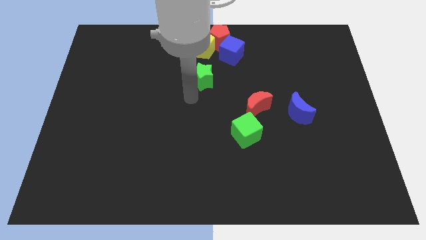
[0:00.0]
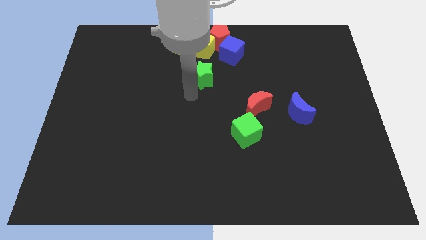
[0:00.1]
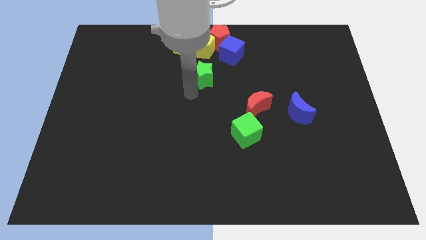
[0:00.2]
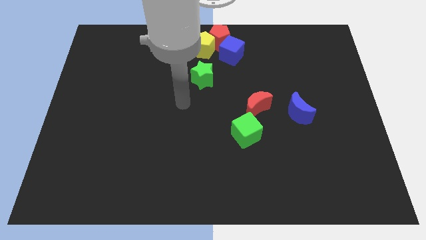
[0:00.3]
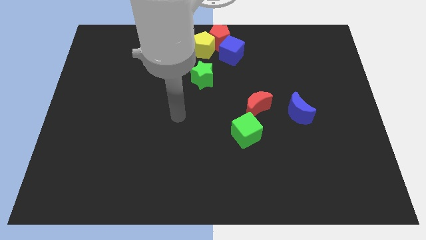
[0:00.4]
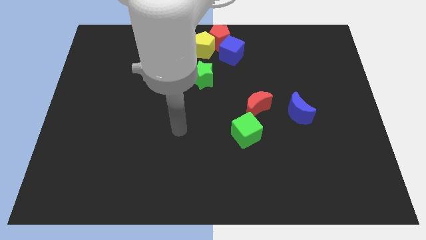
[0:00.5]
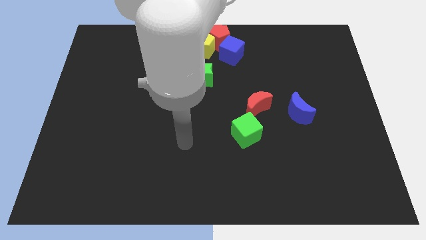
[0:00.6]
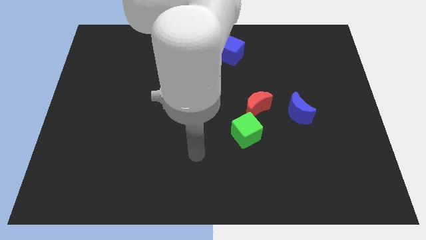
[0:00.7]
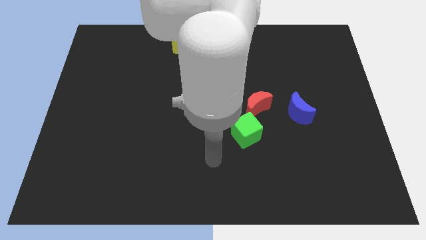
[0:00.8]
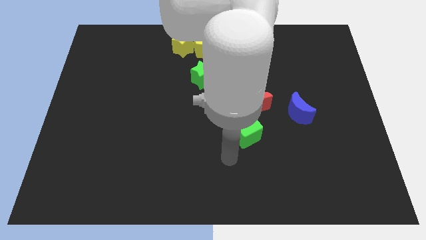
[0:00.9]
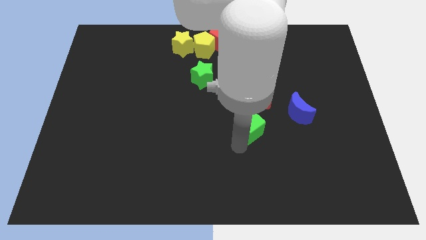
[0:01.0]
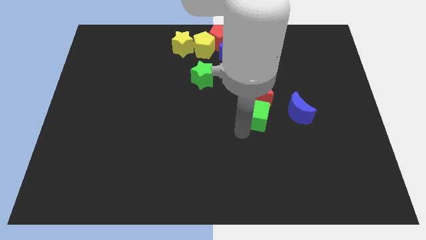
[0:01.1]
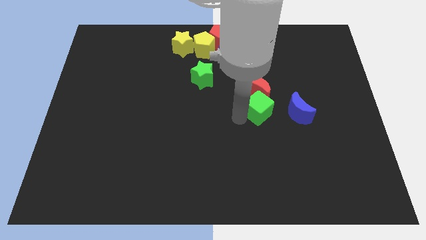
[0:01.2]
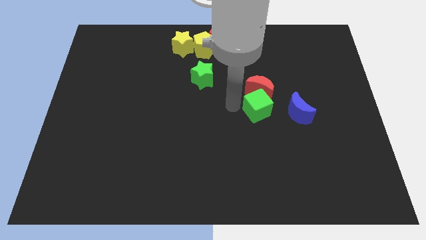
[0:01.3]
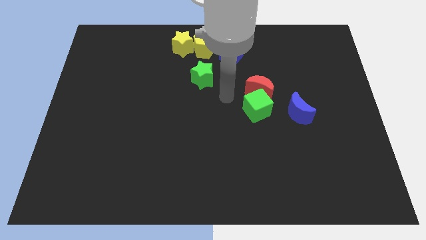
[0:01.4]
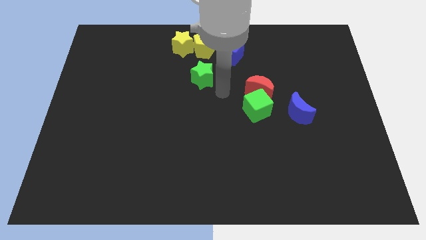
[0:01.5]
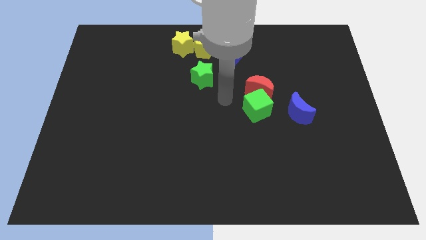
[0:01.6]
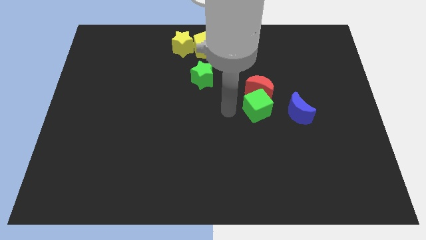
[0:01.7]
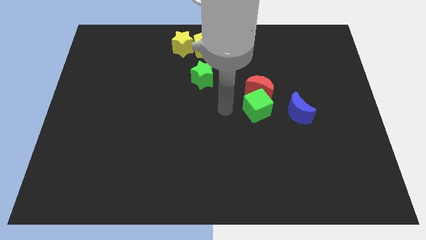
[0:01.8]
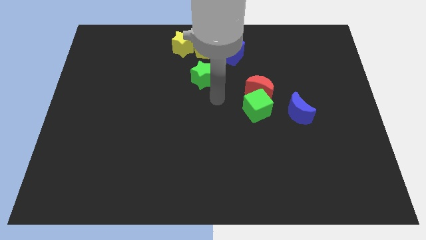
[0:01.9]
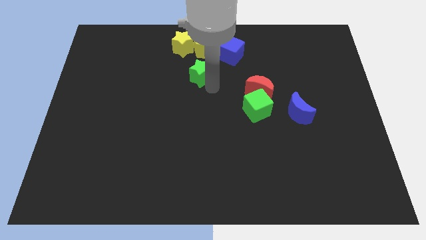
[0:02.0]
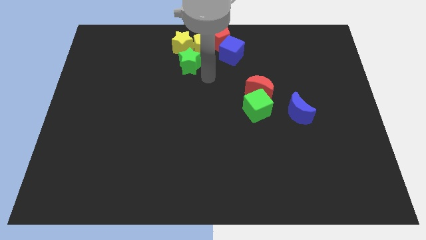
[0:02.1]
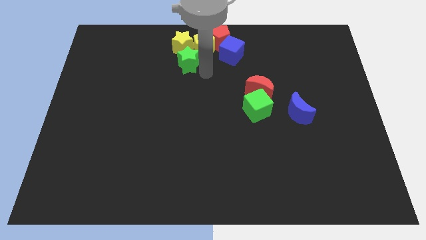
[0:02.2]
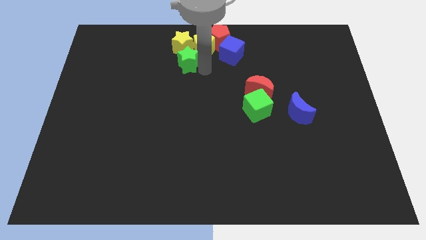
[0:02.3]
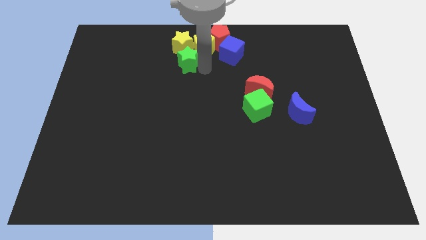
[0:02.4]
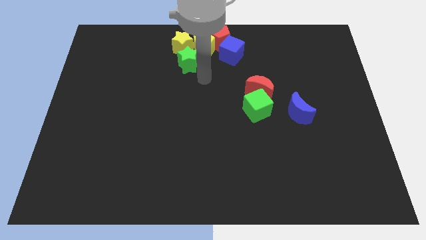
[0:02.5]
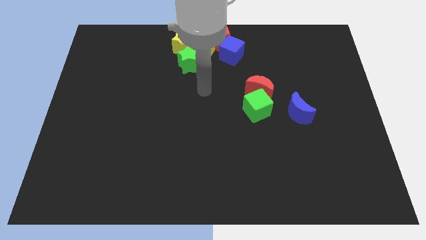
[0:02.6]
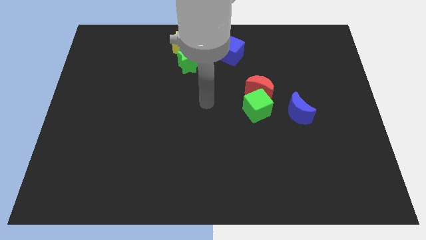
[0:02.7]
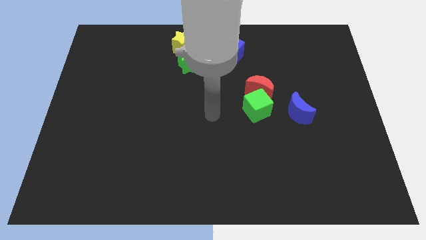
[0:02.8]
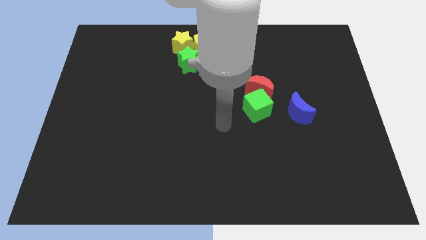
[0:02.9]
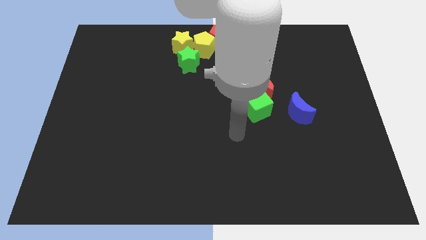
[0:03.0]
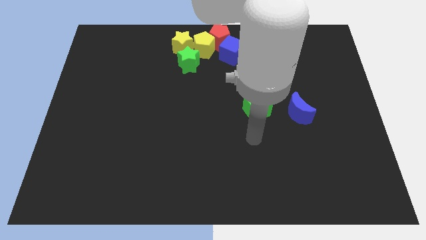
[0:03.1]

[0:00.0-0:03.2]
move both the green blocks towards the top side of the board

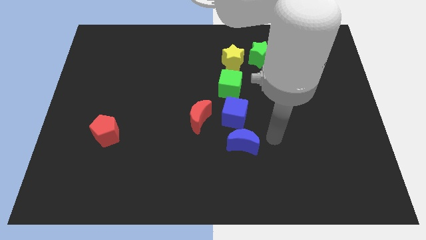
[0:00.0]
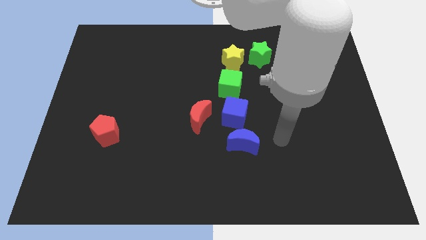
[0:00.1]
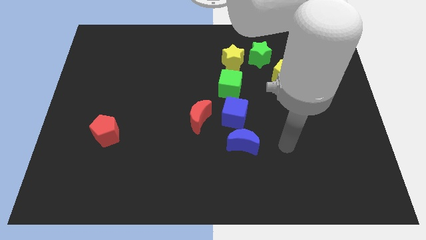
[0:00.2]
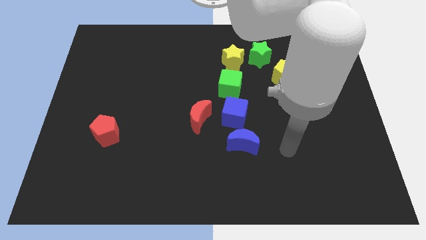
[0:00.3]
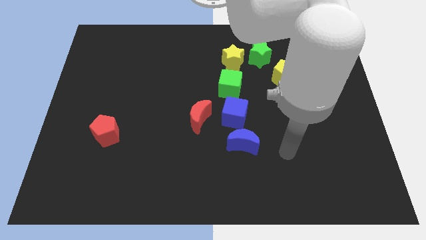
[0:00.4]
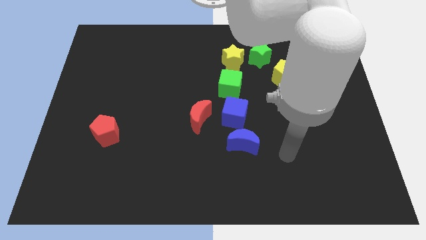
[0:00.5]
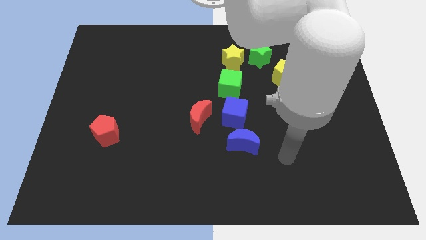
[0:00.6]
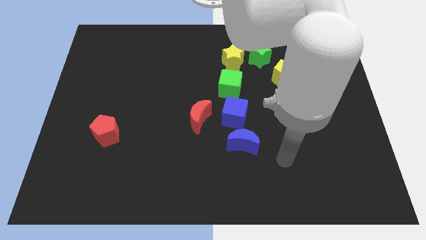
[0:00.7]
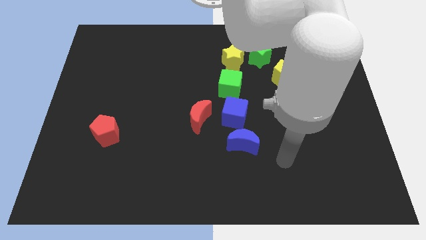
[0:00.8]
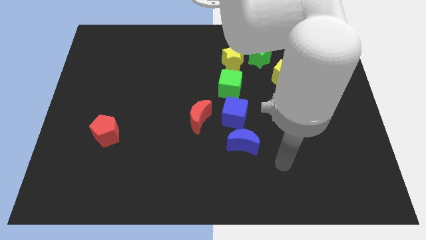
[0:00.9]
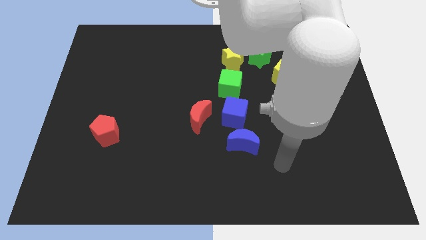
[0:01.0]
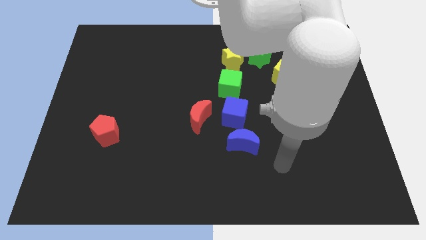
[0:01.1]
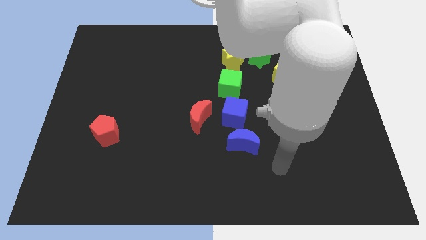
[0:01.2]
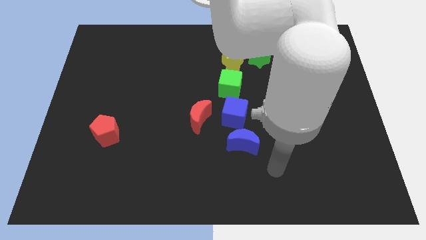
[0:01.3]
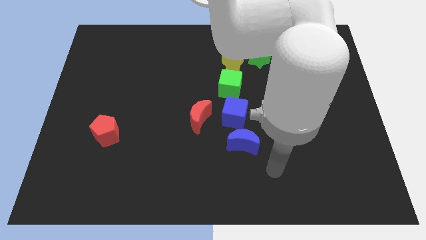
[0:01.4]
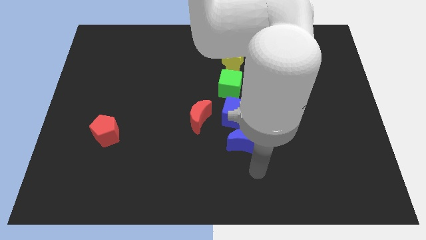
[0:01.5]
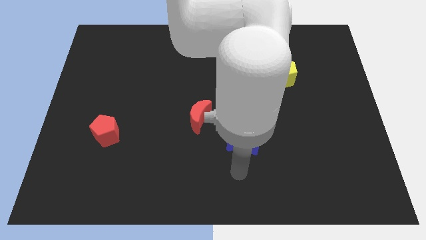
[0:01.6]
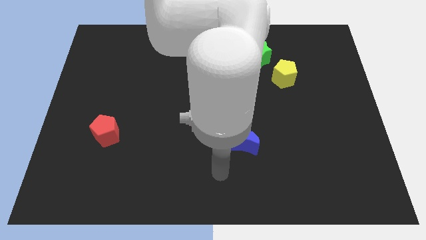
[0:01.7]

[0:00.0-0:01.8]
point your hand below the blue moon

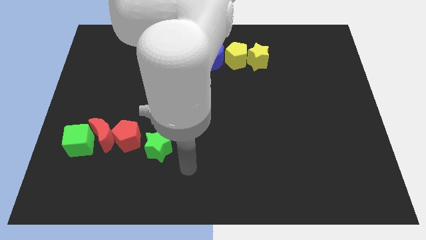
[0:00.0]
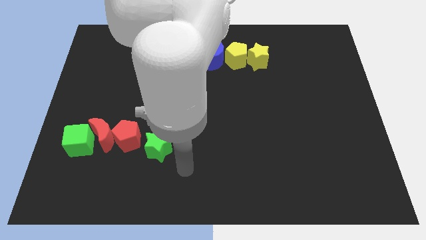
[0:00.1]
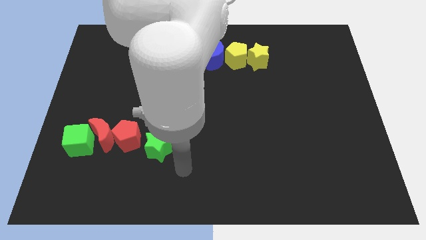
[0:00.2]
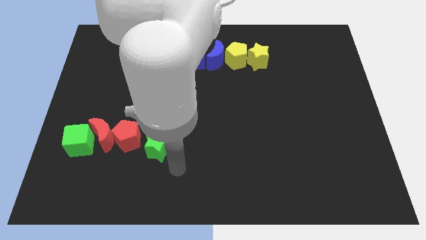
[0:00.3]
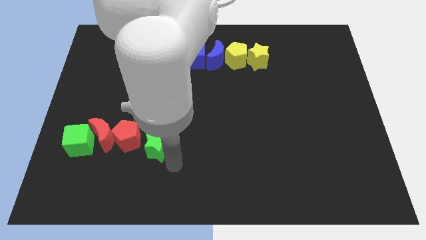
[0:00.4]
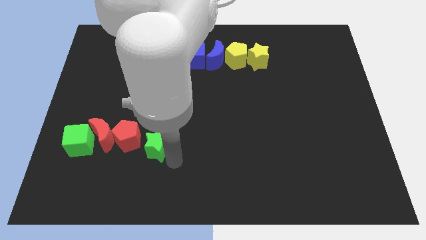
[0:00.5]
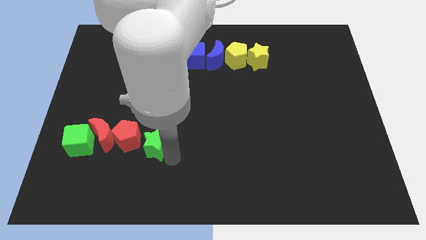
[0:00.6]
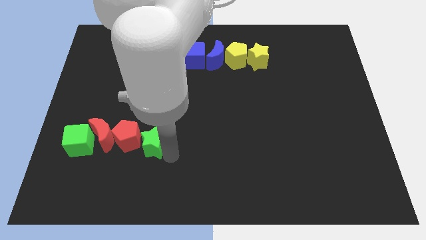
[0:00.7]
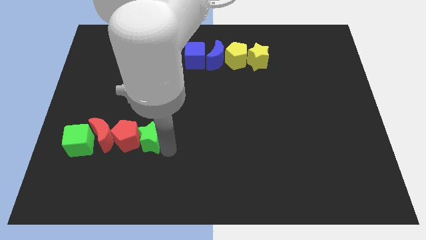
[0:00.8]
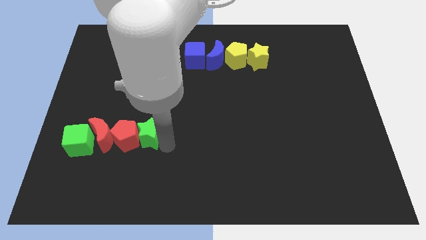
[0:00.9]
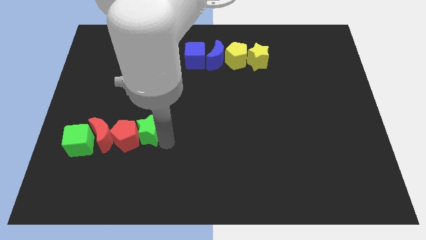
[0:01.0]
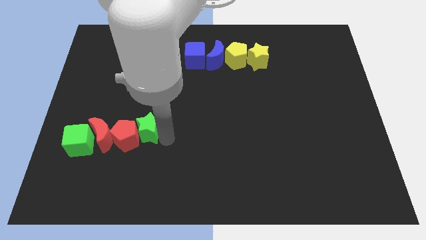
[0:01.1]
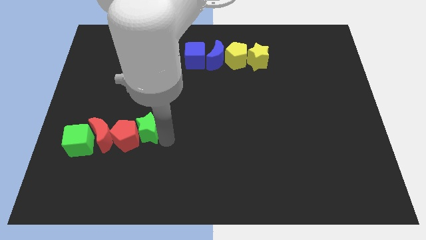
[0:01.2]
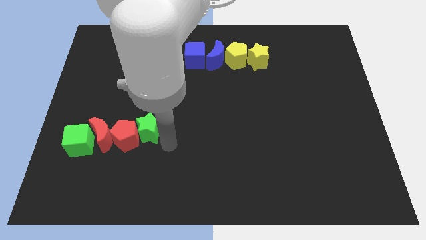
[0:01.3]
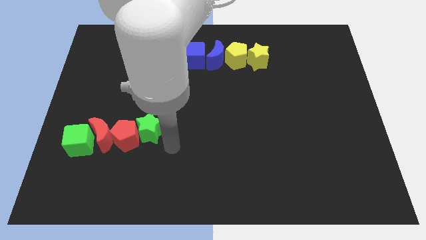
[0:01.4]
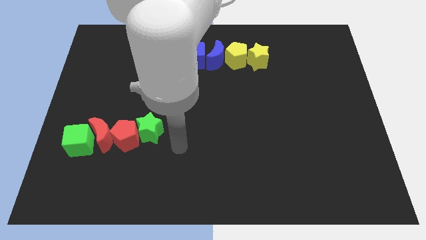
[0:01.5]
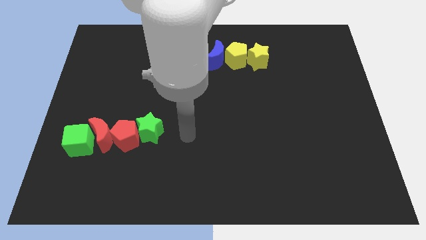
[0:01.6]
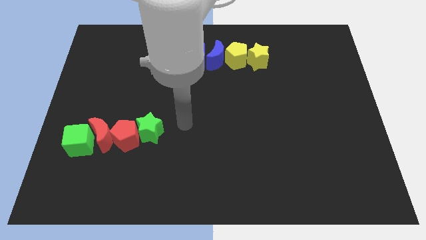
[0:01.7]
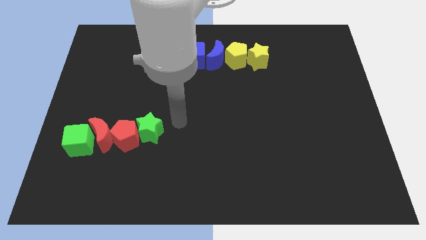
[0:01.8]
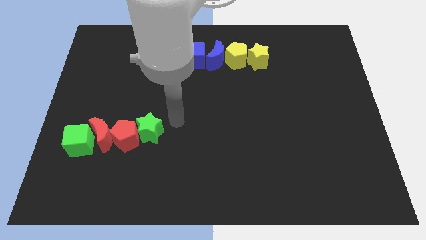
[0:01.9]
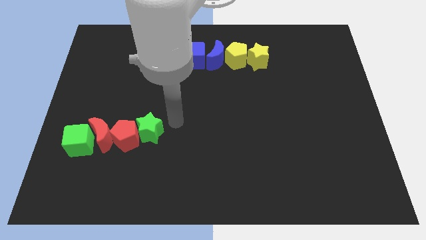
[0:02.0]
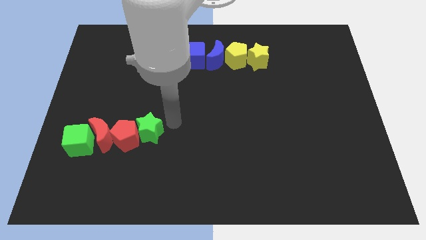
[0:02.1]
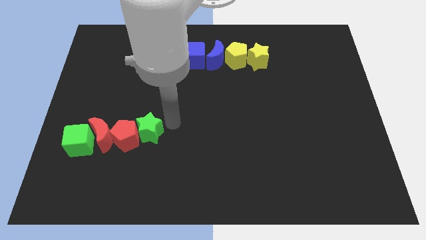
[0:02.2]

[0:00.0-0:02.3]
push the green star into the red pentagon

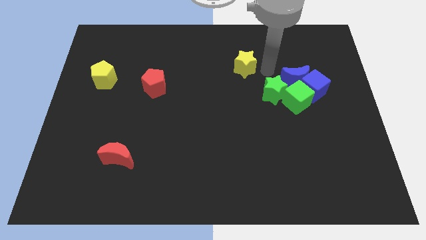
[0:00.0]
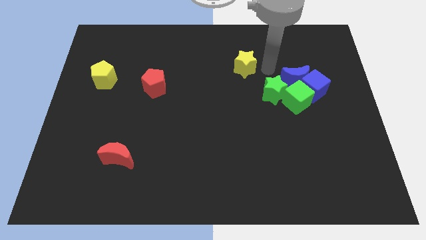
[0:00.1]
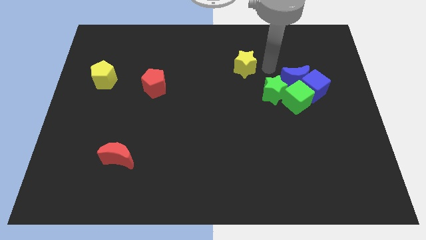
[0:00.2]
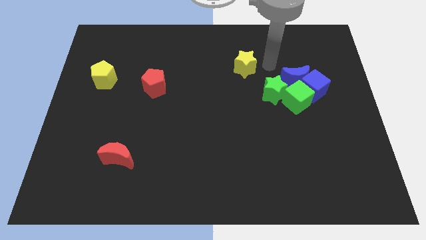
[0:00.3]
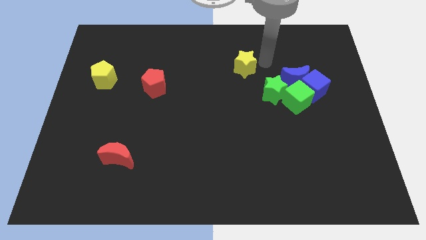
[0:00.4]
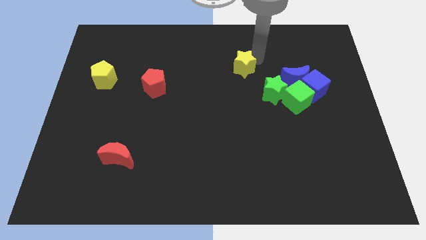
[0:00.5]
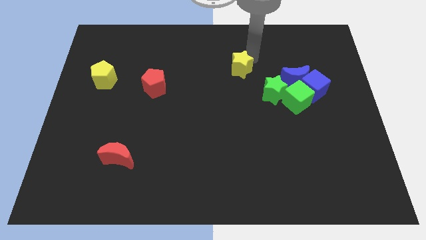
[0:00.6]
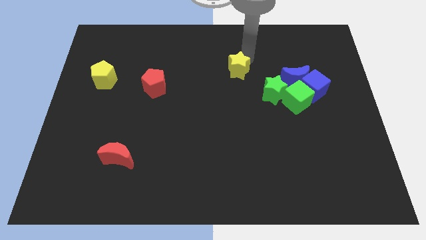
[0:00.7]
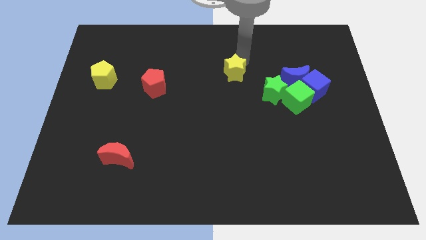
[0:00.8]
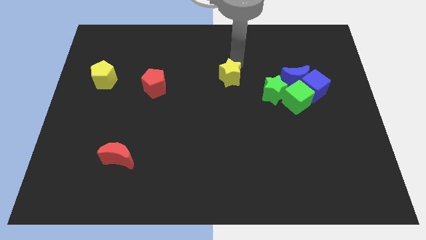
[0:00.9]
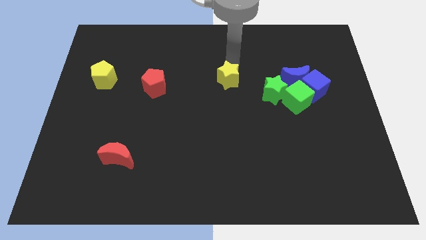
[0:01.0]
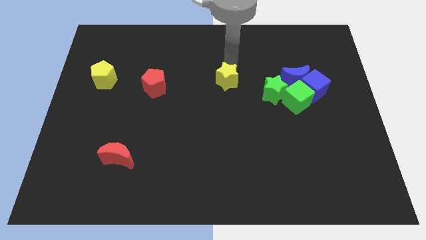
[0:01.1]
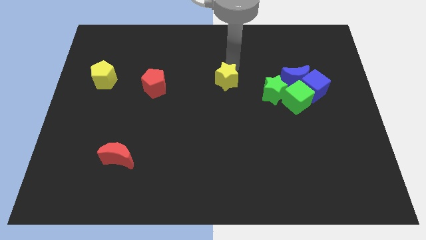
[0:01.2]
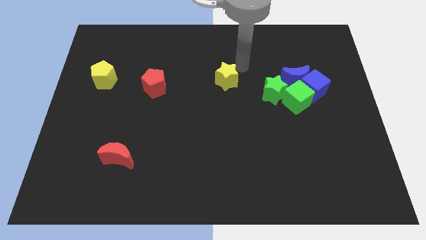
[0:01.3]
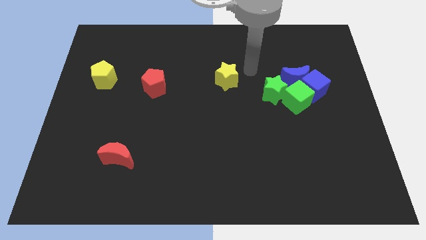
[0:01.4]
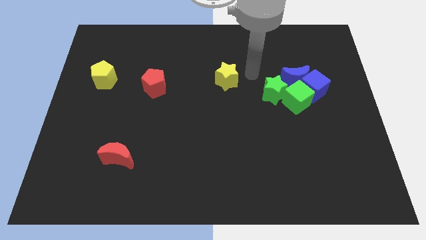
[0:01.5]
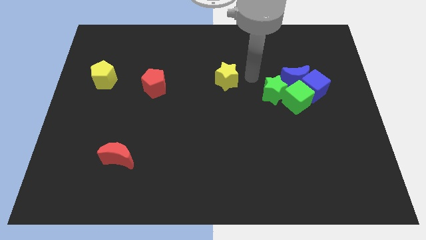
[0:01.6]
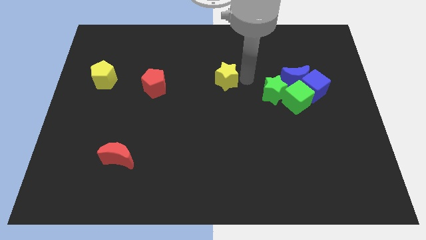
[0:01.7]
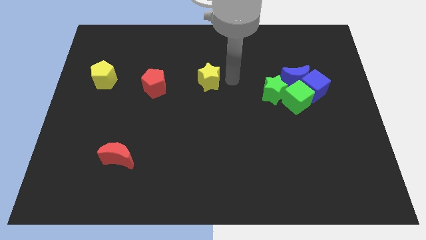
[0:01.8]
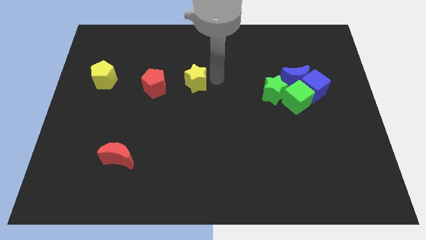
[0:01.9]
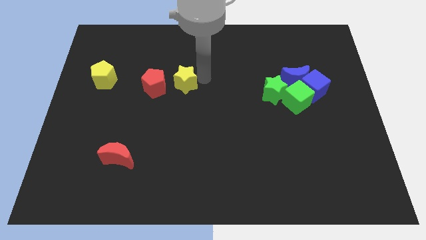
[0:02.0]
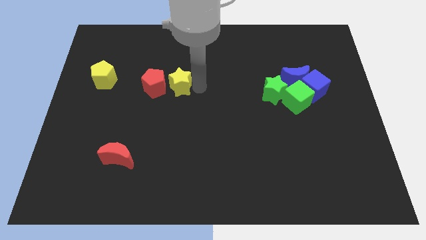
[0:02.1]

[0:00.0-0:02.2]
push the yellow star close to the red pentagon
